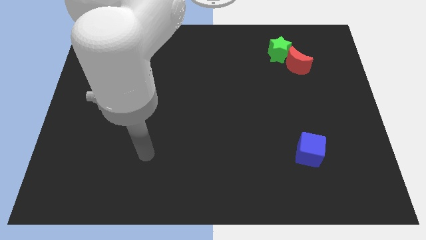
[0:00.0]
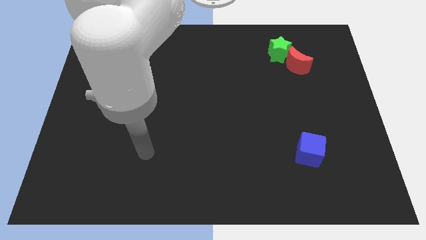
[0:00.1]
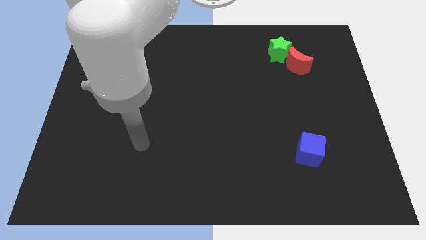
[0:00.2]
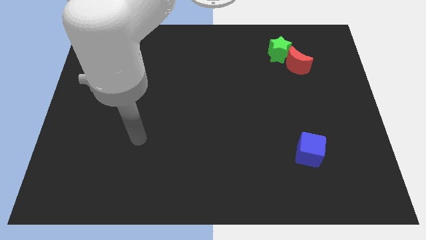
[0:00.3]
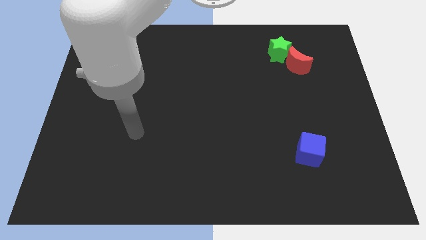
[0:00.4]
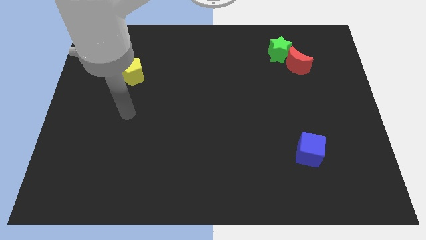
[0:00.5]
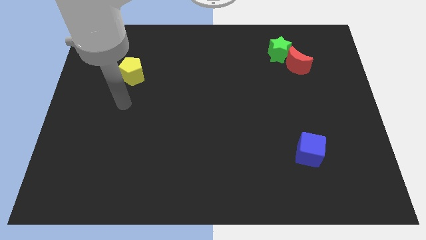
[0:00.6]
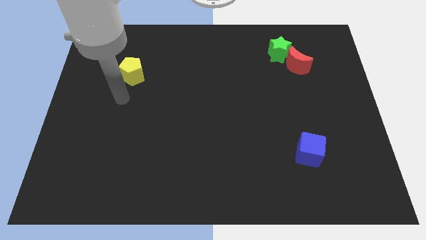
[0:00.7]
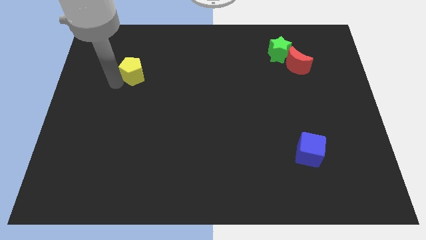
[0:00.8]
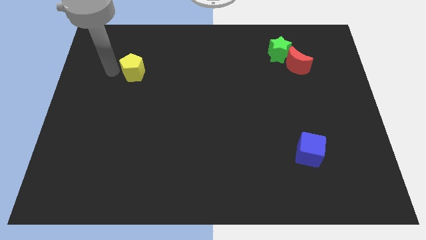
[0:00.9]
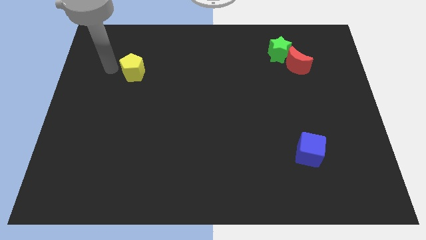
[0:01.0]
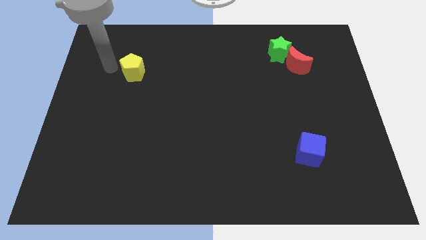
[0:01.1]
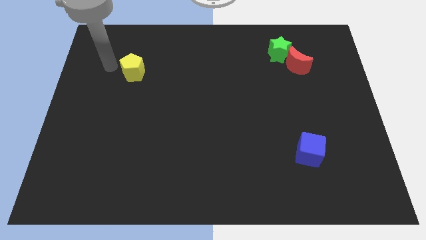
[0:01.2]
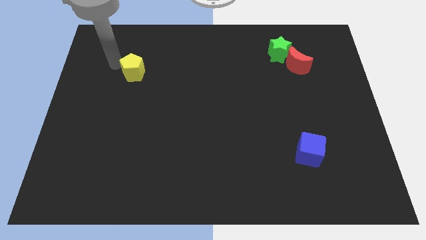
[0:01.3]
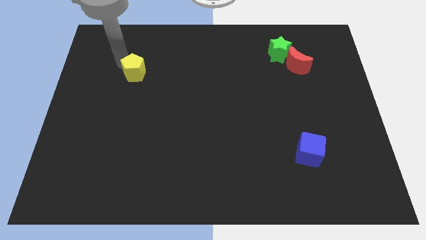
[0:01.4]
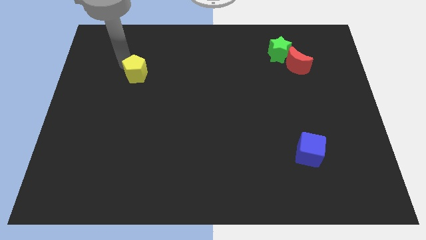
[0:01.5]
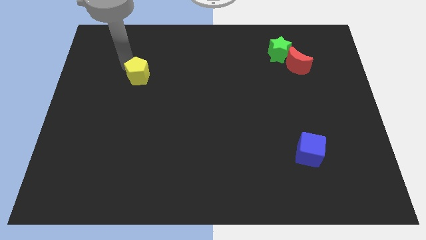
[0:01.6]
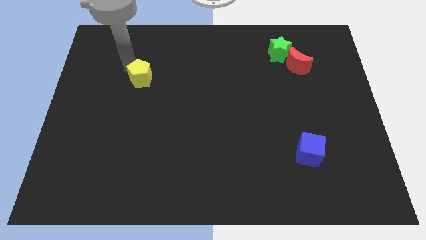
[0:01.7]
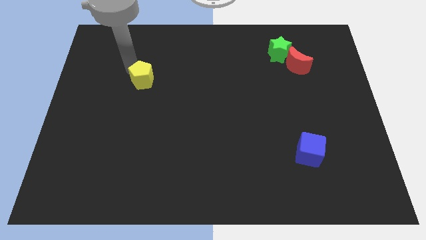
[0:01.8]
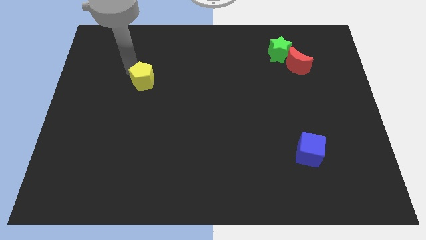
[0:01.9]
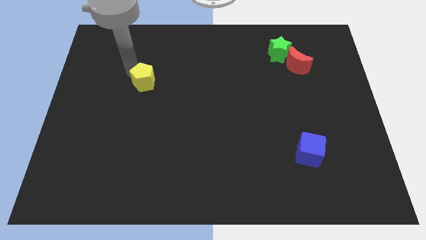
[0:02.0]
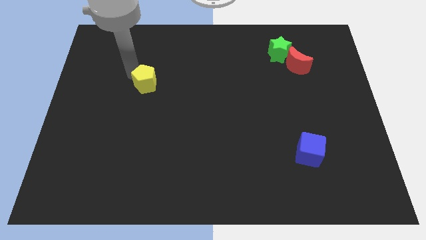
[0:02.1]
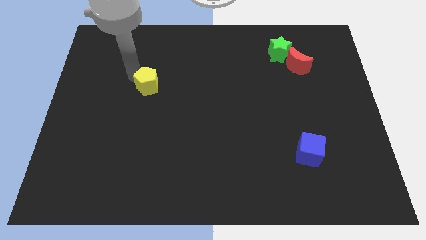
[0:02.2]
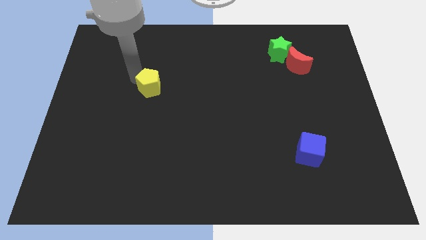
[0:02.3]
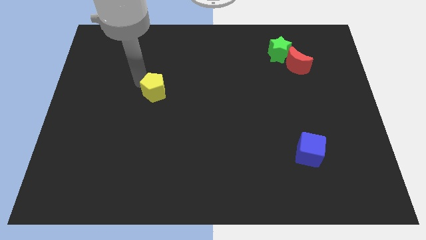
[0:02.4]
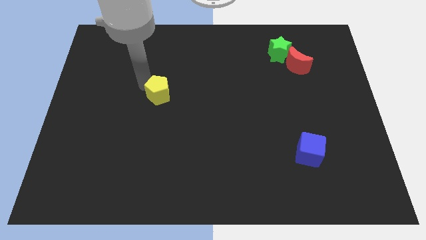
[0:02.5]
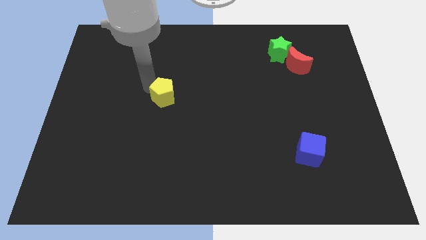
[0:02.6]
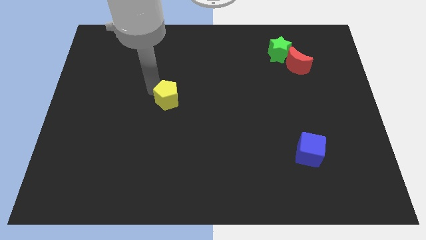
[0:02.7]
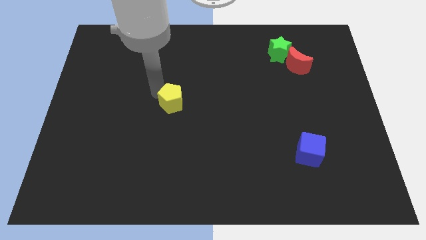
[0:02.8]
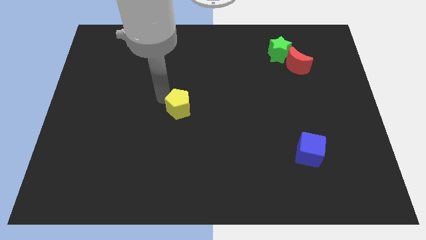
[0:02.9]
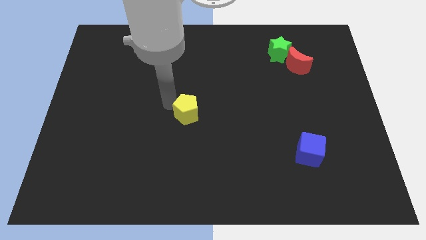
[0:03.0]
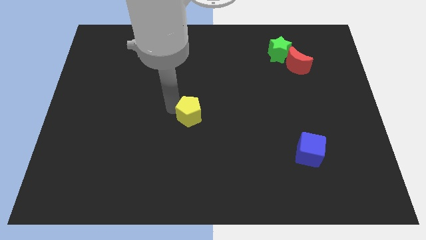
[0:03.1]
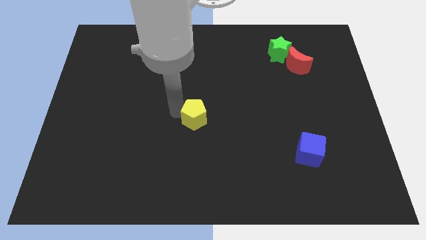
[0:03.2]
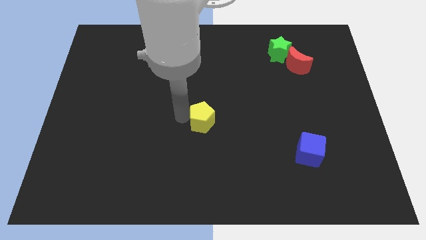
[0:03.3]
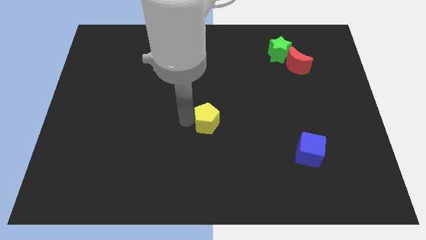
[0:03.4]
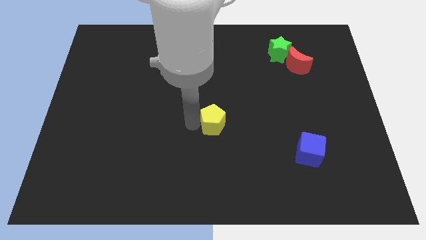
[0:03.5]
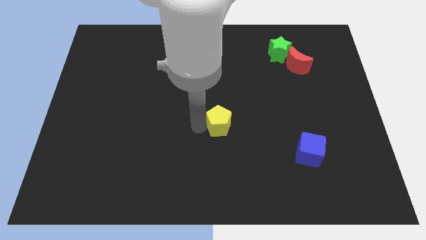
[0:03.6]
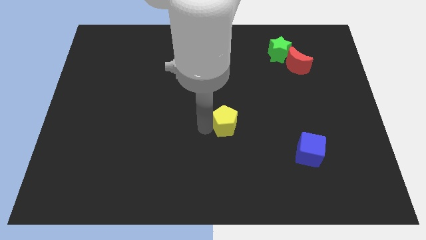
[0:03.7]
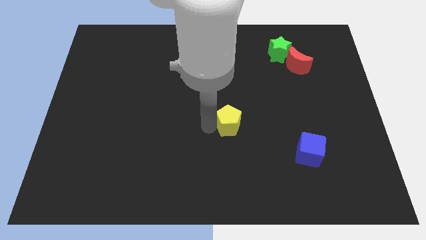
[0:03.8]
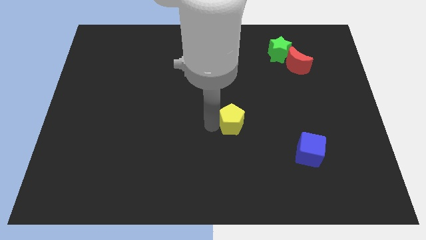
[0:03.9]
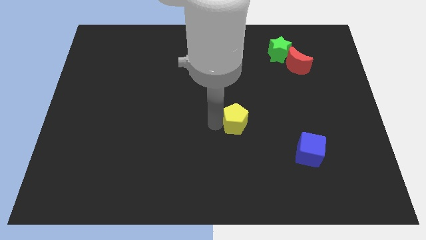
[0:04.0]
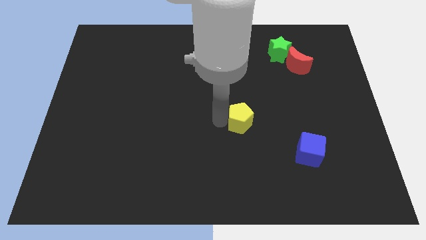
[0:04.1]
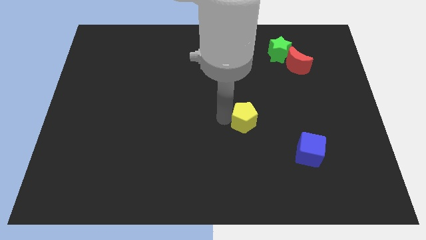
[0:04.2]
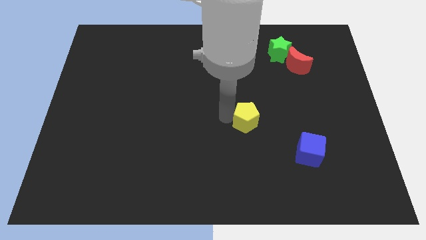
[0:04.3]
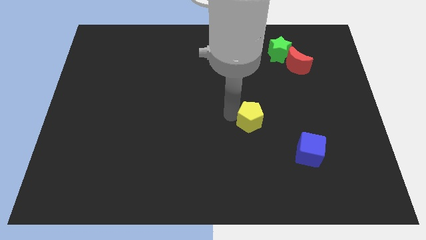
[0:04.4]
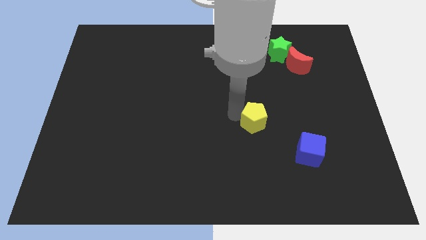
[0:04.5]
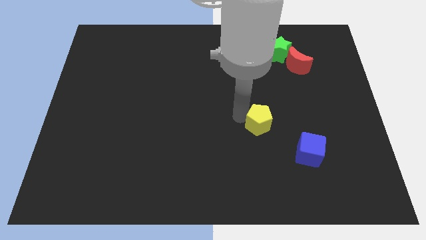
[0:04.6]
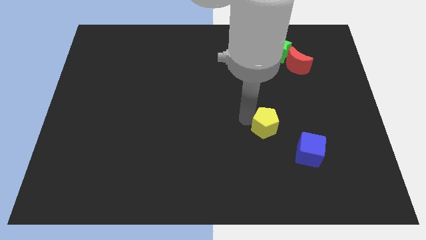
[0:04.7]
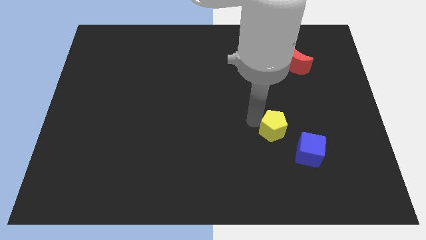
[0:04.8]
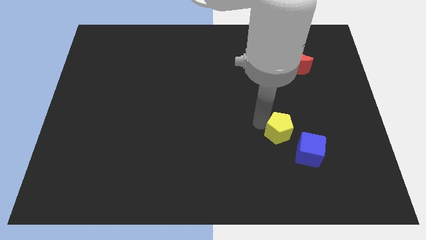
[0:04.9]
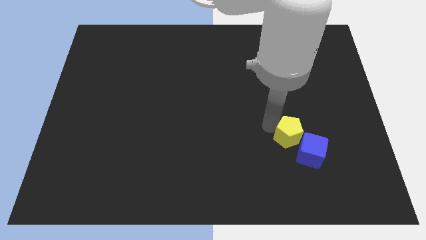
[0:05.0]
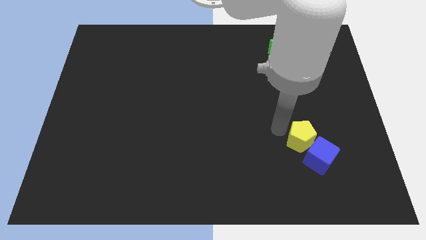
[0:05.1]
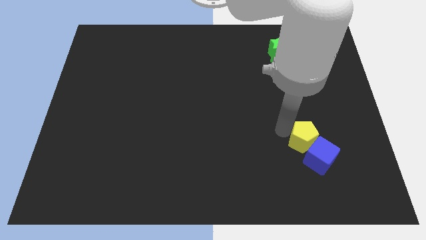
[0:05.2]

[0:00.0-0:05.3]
slide the yellow pentagon towards the blue block

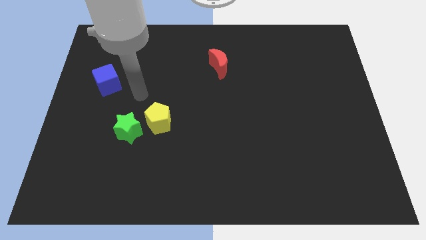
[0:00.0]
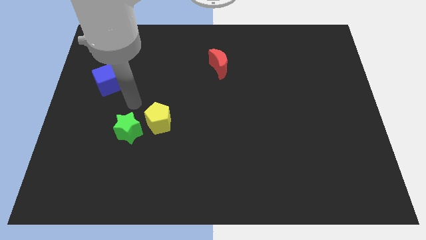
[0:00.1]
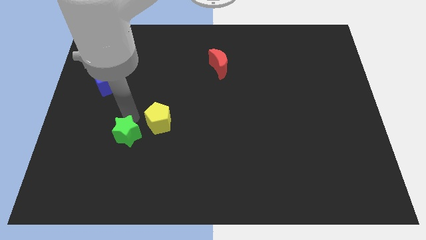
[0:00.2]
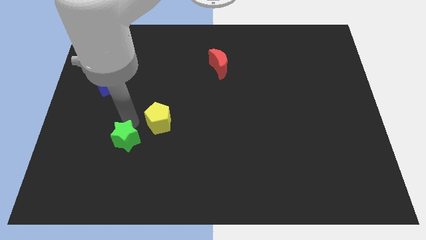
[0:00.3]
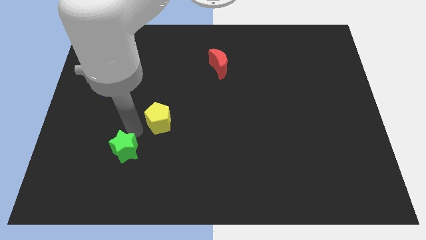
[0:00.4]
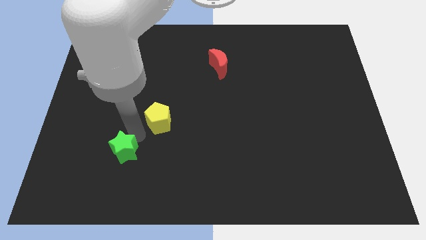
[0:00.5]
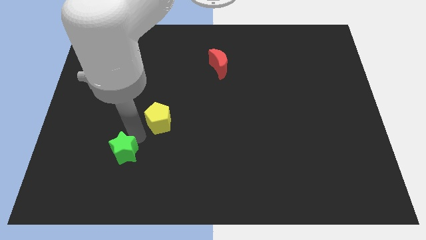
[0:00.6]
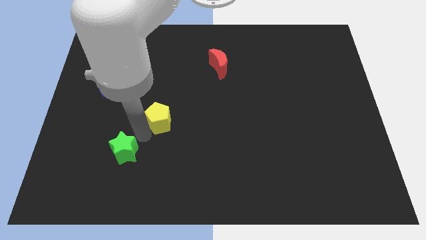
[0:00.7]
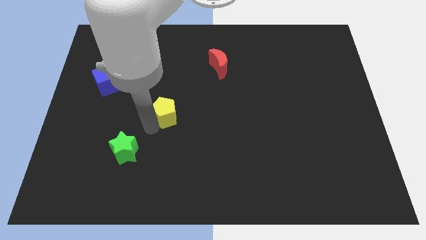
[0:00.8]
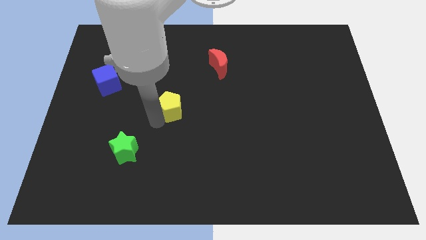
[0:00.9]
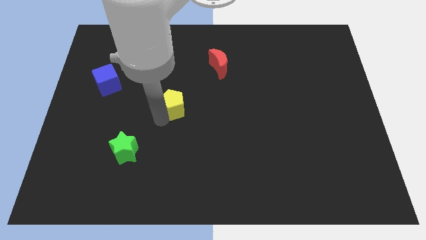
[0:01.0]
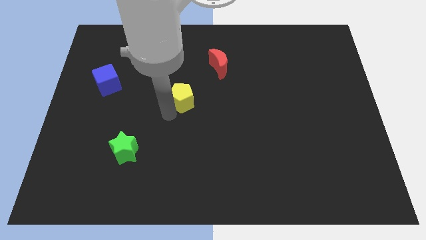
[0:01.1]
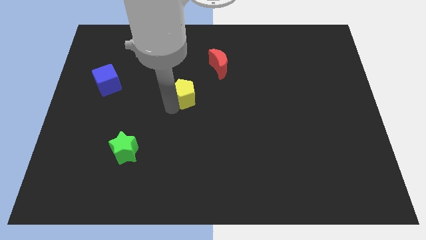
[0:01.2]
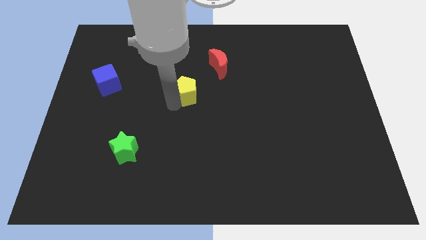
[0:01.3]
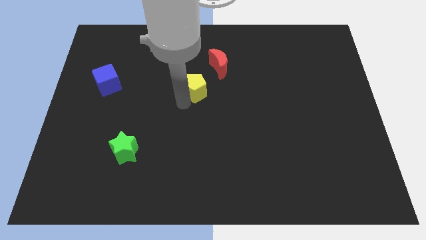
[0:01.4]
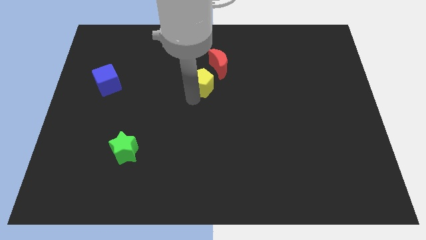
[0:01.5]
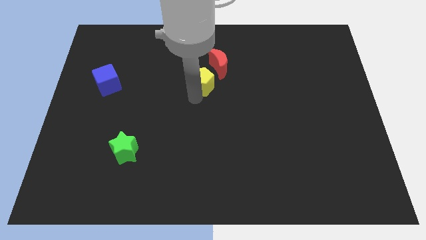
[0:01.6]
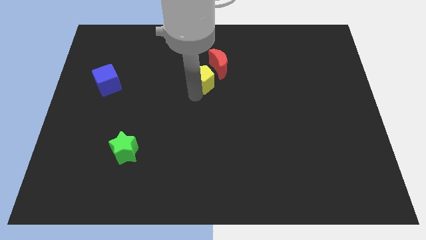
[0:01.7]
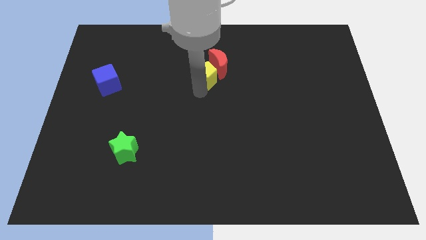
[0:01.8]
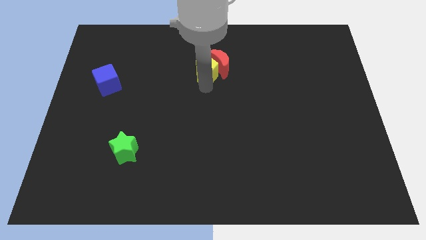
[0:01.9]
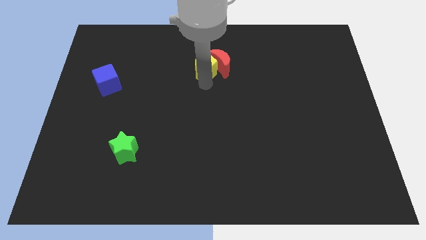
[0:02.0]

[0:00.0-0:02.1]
slide the yellow block towards the moon

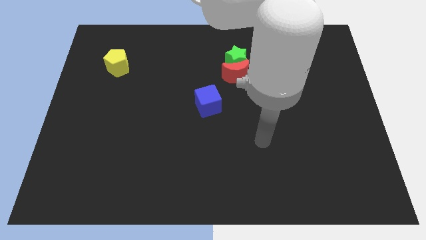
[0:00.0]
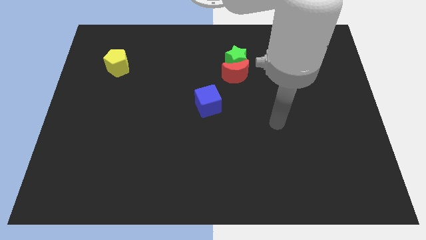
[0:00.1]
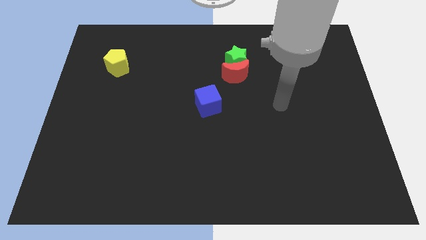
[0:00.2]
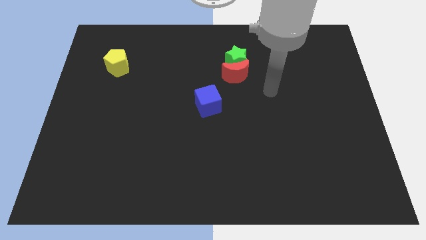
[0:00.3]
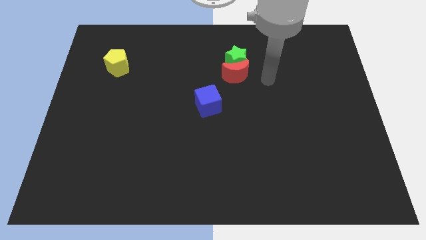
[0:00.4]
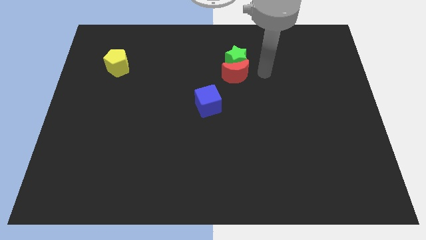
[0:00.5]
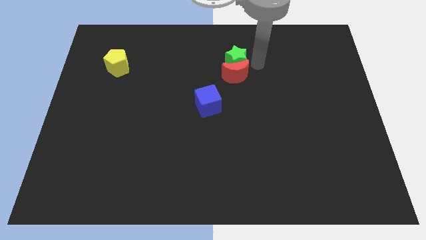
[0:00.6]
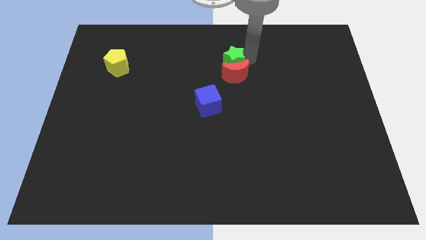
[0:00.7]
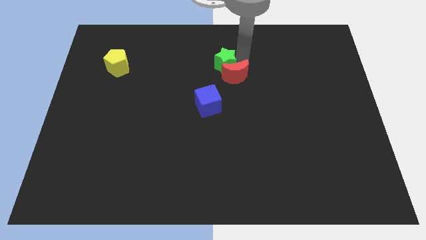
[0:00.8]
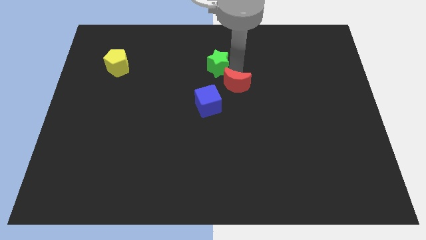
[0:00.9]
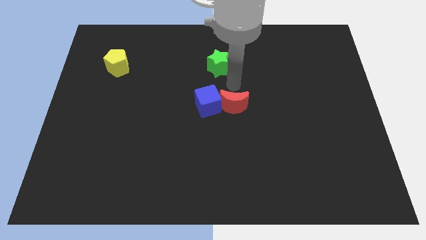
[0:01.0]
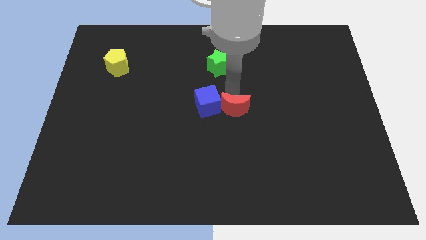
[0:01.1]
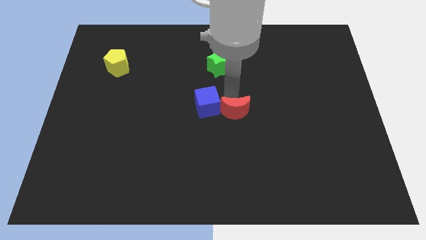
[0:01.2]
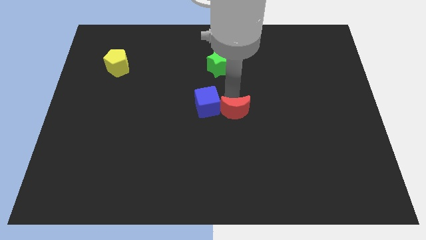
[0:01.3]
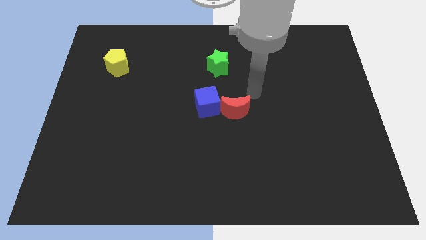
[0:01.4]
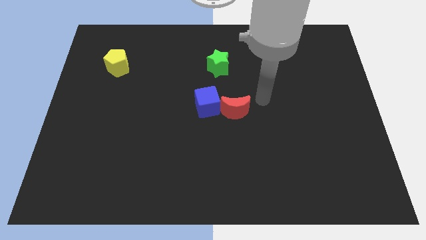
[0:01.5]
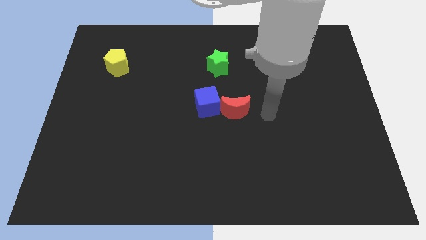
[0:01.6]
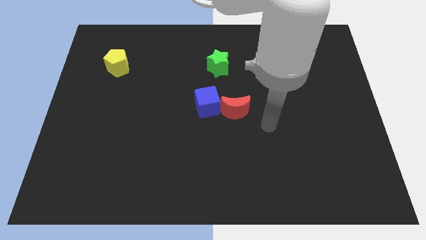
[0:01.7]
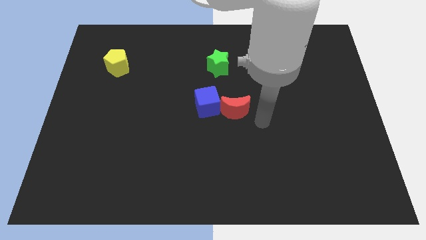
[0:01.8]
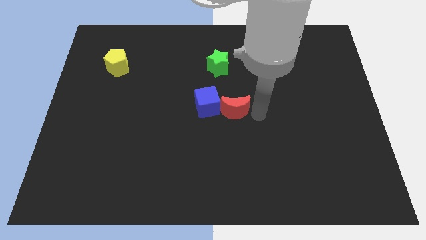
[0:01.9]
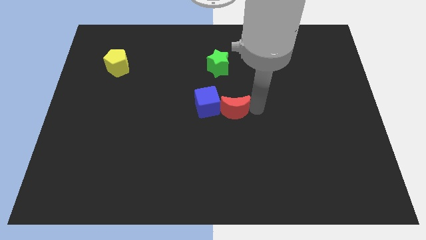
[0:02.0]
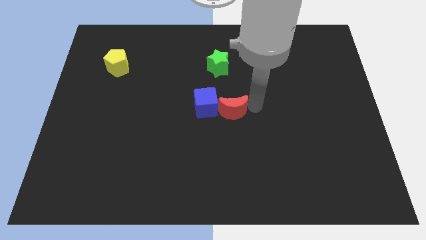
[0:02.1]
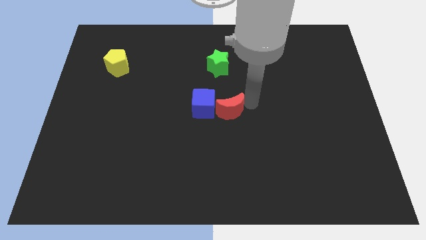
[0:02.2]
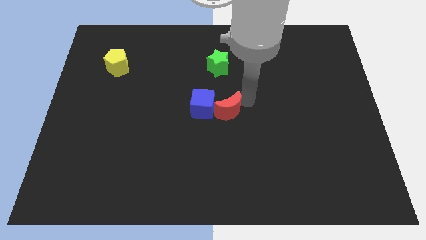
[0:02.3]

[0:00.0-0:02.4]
move the red moon close to the cube
